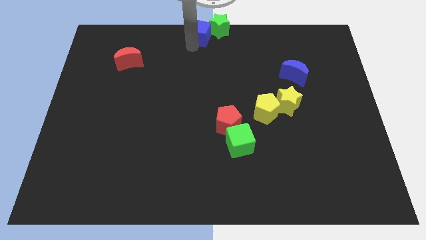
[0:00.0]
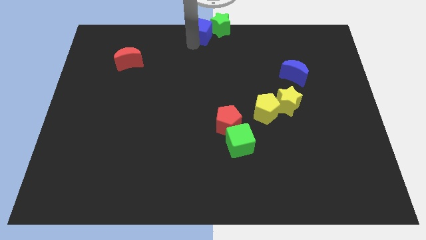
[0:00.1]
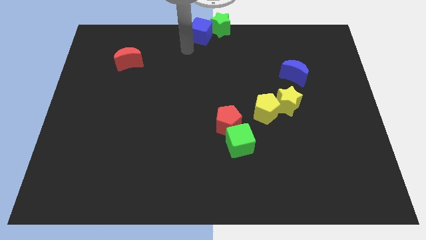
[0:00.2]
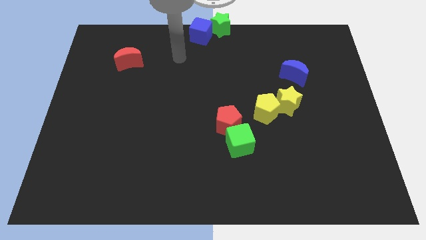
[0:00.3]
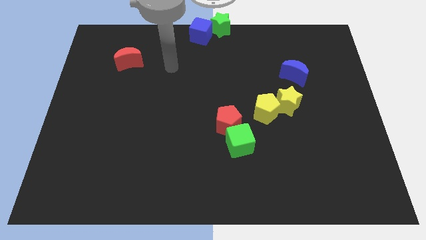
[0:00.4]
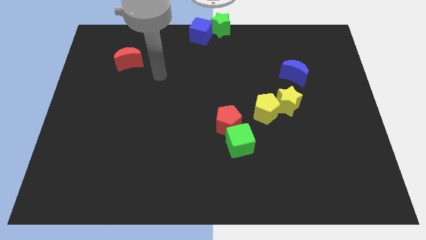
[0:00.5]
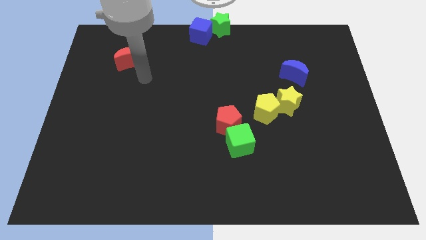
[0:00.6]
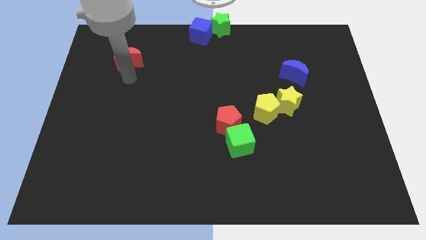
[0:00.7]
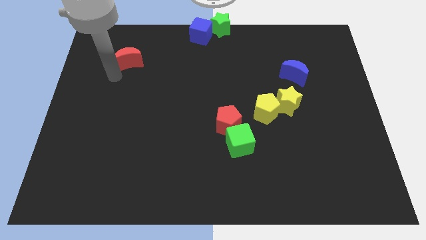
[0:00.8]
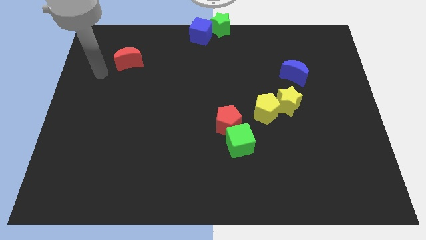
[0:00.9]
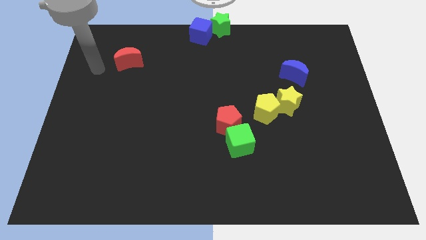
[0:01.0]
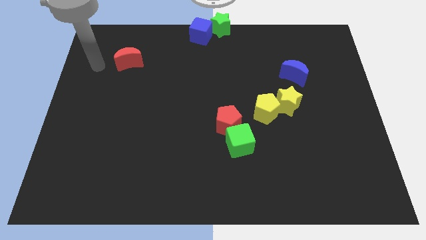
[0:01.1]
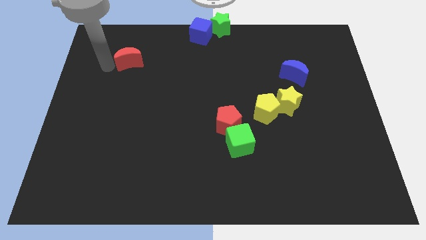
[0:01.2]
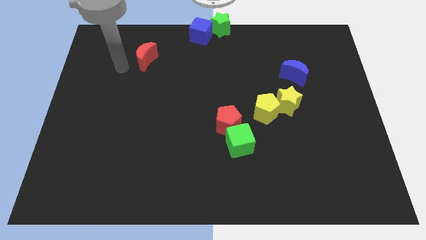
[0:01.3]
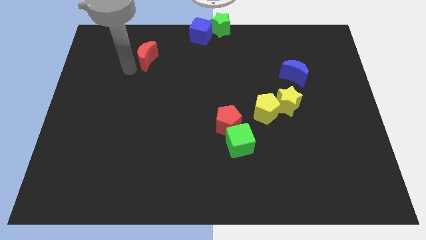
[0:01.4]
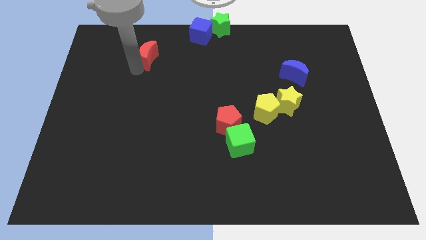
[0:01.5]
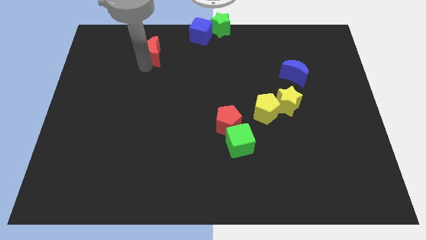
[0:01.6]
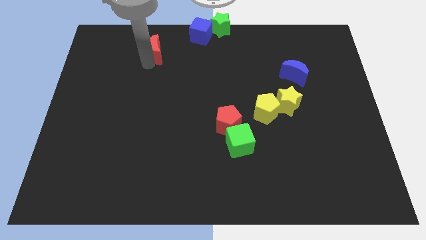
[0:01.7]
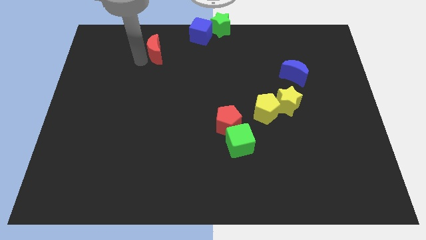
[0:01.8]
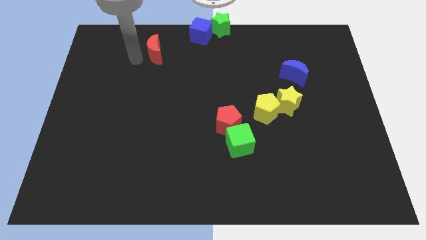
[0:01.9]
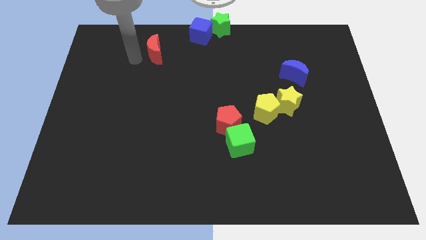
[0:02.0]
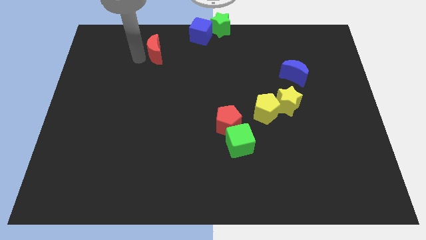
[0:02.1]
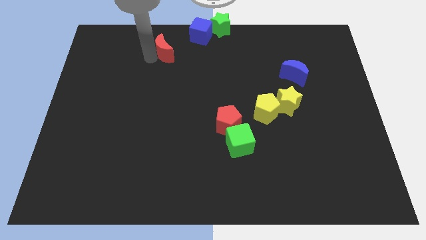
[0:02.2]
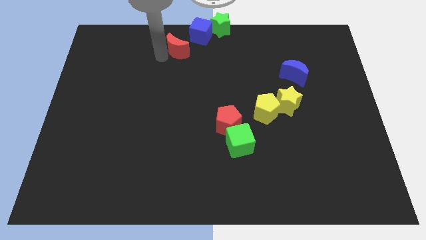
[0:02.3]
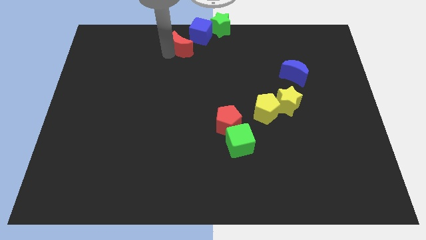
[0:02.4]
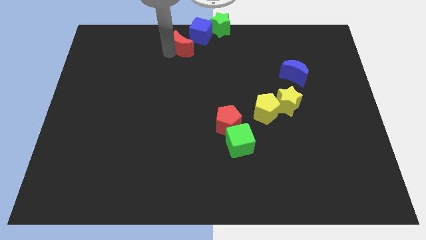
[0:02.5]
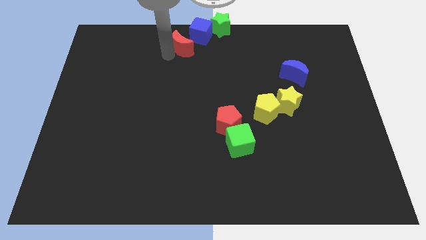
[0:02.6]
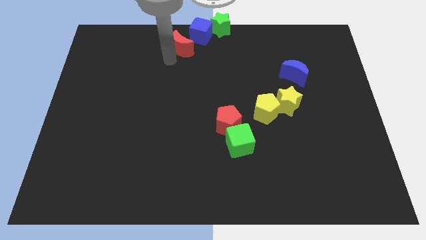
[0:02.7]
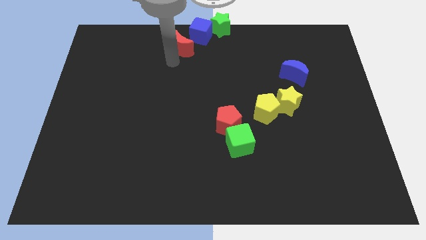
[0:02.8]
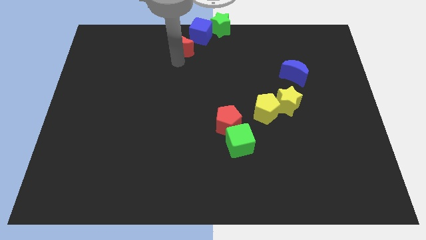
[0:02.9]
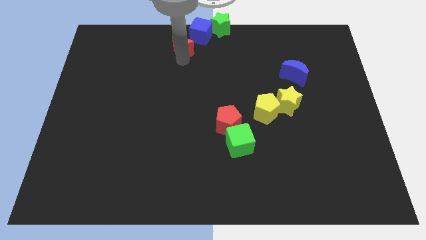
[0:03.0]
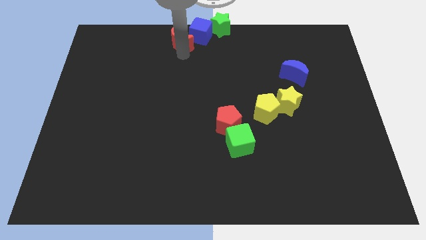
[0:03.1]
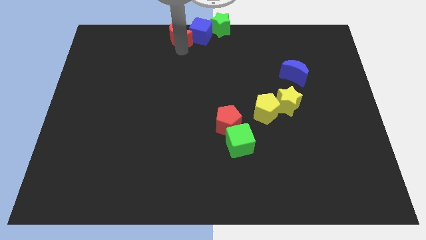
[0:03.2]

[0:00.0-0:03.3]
place red crescent below the blue cube

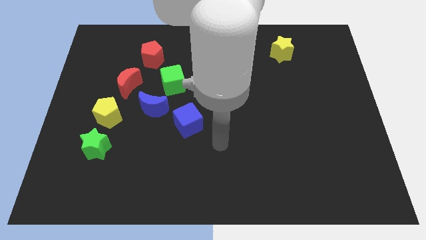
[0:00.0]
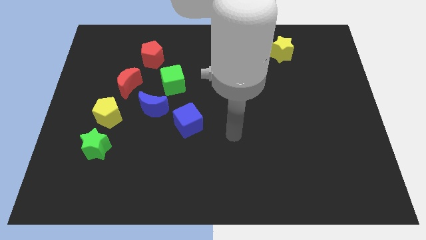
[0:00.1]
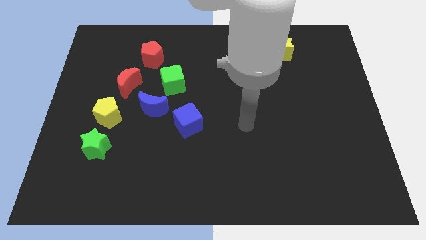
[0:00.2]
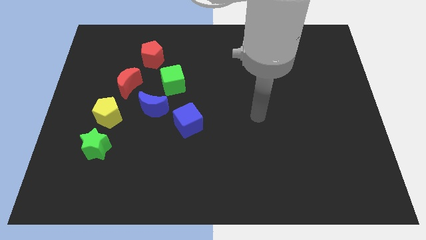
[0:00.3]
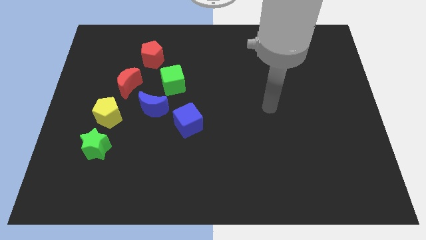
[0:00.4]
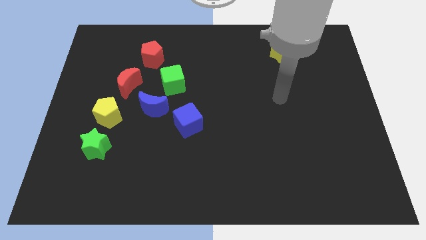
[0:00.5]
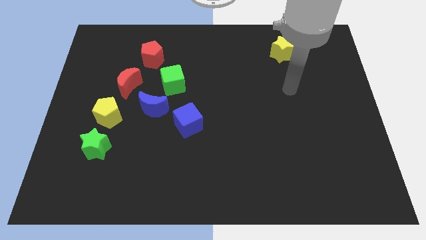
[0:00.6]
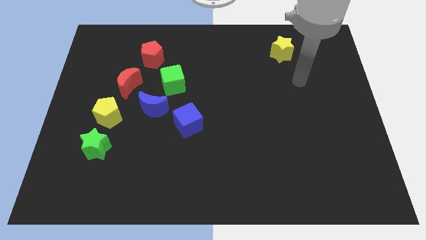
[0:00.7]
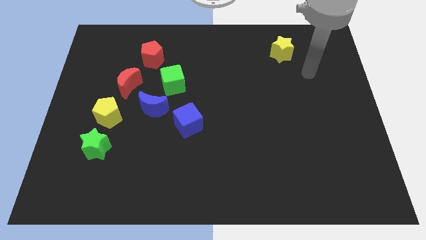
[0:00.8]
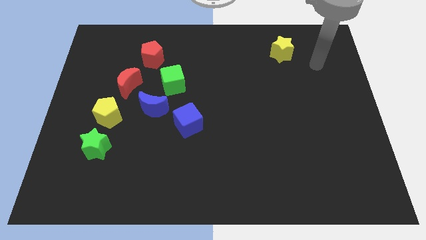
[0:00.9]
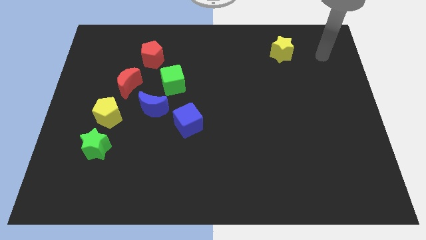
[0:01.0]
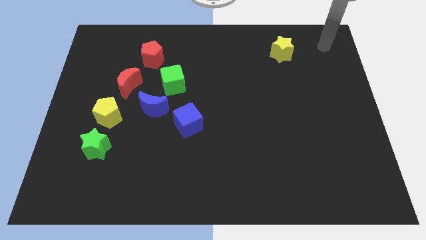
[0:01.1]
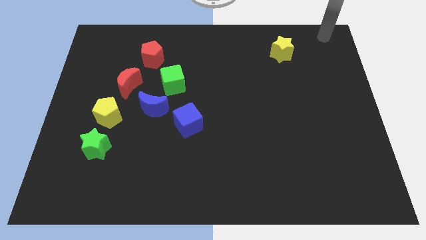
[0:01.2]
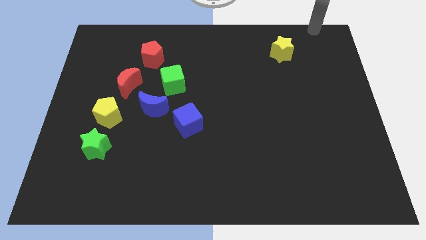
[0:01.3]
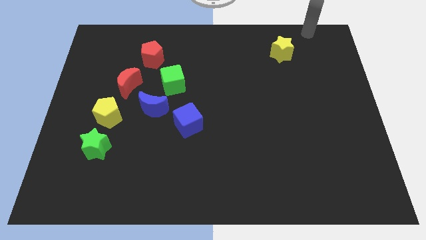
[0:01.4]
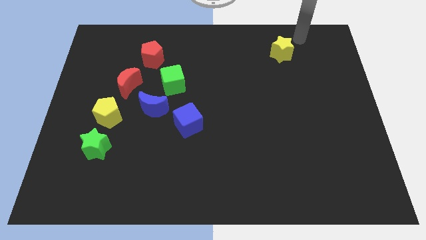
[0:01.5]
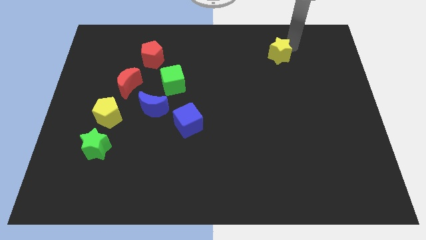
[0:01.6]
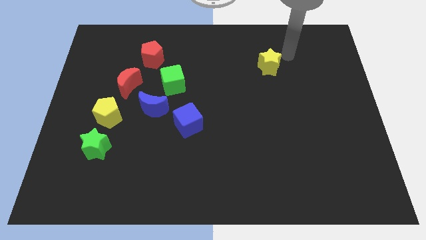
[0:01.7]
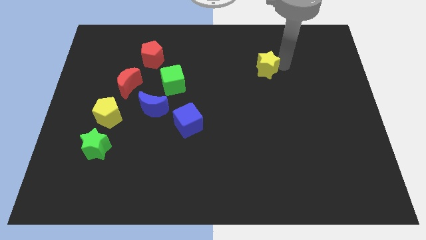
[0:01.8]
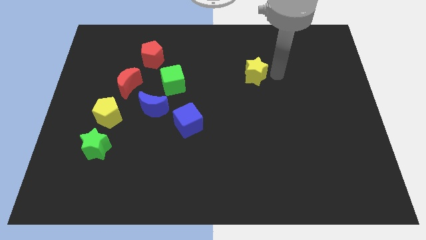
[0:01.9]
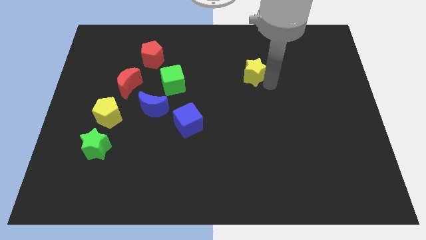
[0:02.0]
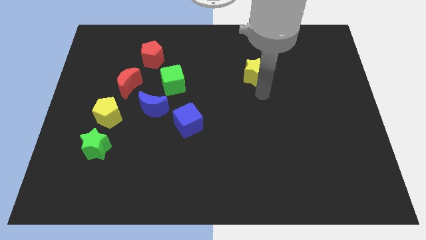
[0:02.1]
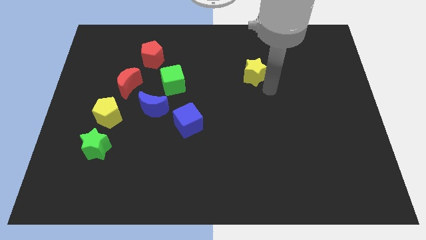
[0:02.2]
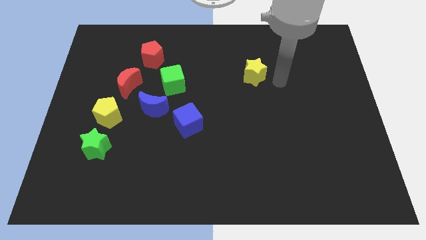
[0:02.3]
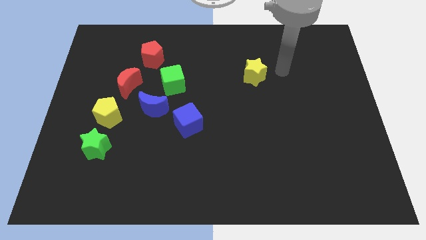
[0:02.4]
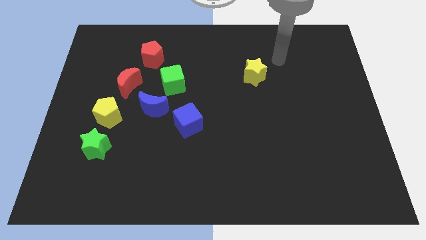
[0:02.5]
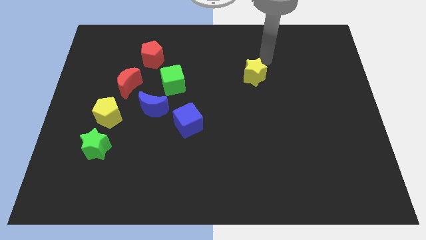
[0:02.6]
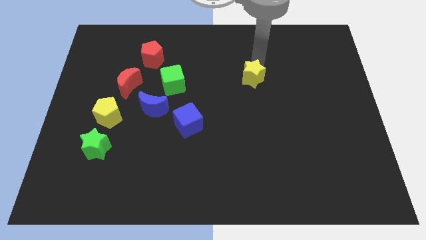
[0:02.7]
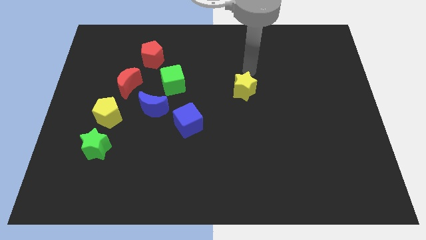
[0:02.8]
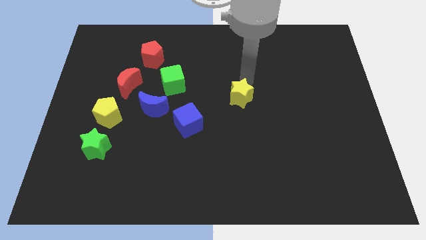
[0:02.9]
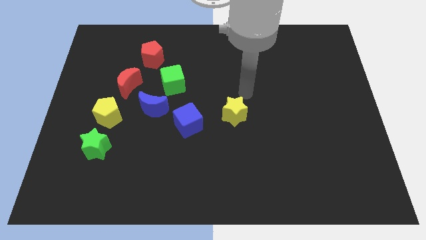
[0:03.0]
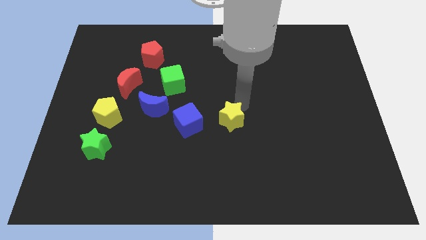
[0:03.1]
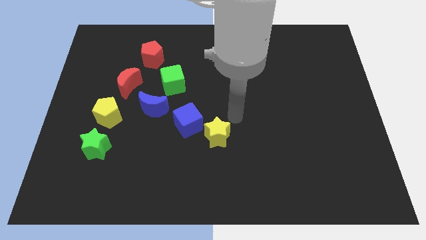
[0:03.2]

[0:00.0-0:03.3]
slide the yellow star to the right side of the blue cube

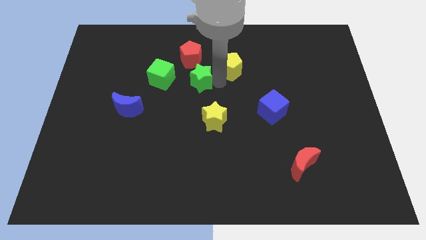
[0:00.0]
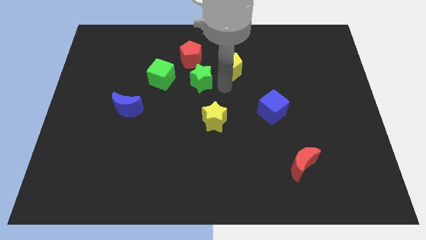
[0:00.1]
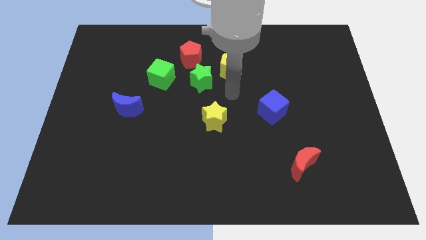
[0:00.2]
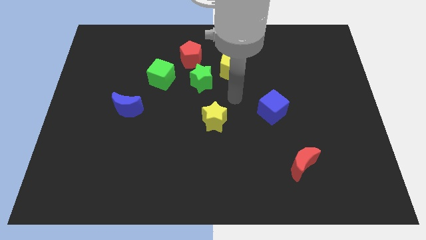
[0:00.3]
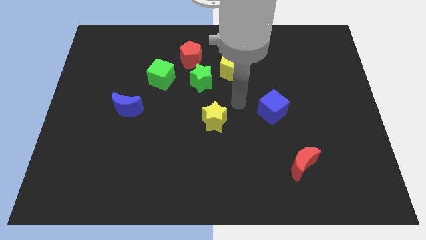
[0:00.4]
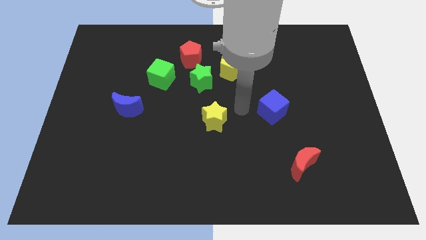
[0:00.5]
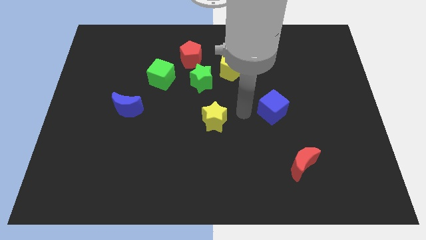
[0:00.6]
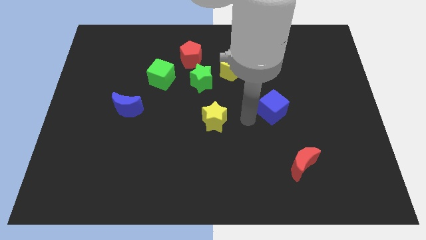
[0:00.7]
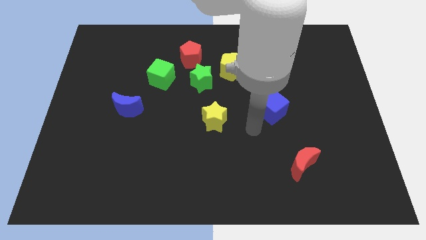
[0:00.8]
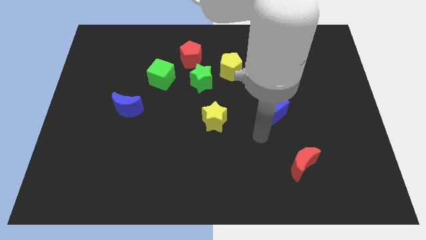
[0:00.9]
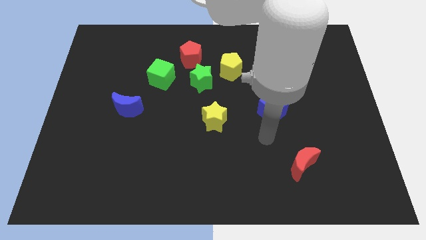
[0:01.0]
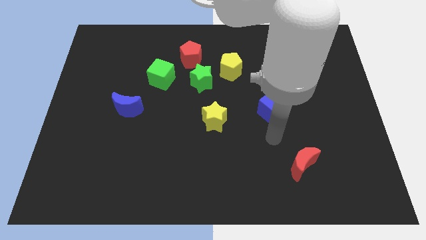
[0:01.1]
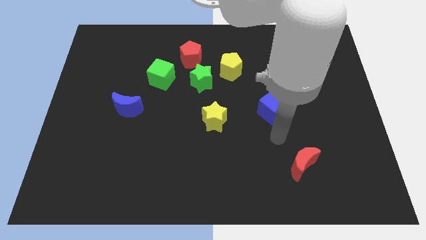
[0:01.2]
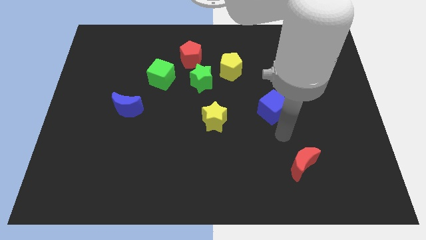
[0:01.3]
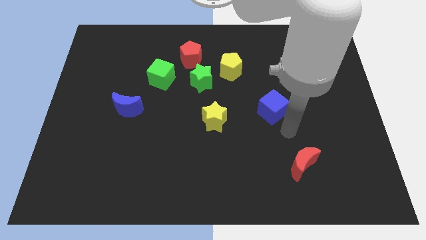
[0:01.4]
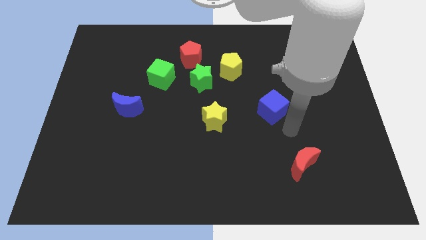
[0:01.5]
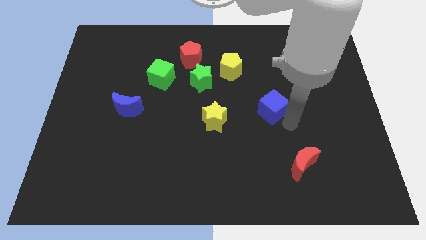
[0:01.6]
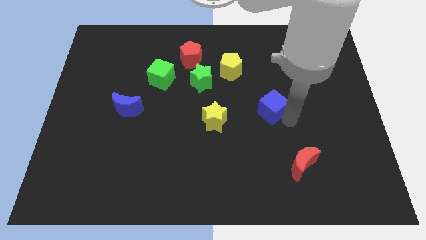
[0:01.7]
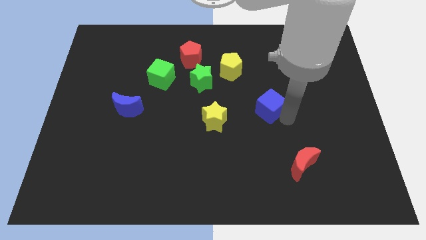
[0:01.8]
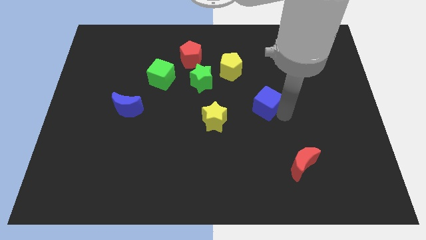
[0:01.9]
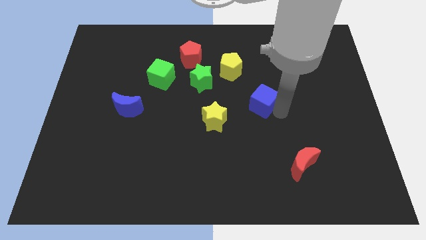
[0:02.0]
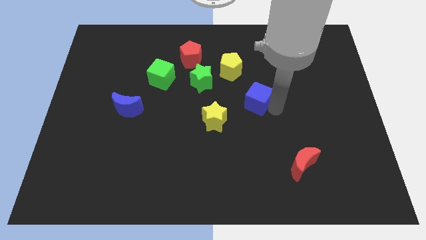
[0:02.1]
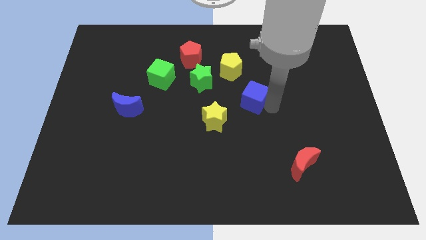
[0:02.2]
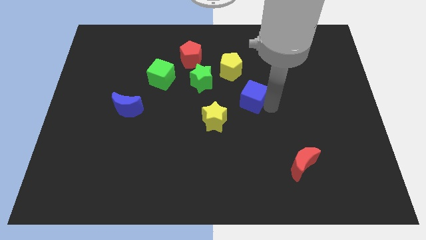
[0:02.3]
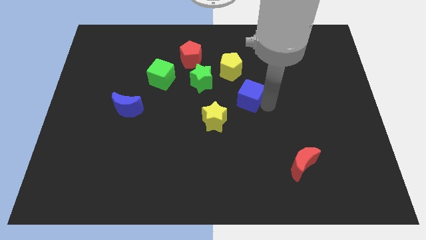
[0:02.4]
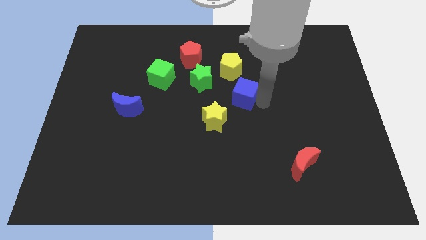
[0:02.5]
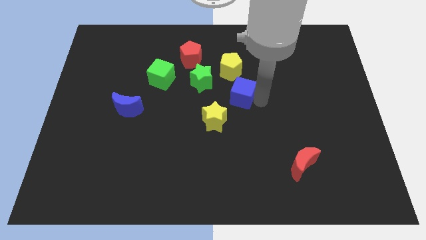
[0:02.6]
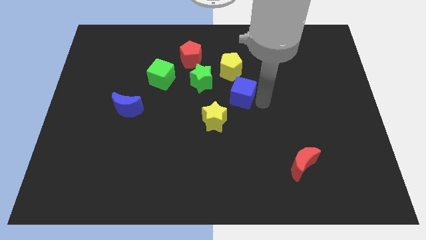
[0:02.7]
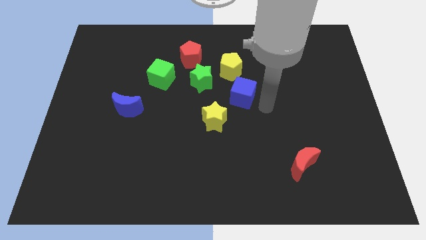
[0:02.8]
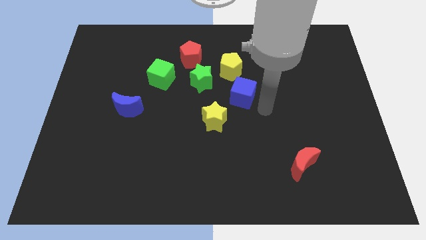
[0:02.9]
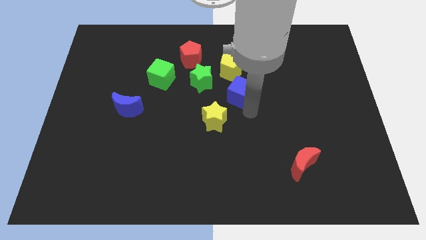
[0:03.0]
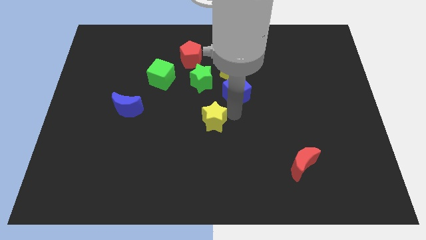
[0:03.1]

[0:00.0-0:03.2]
place blue cube below yellow pentagon
